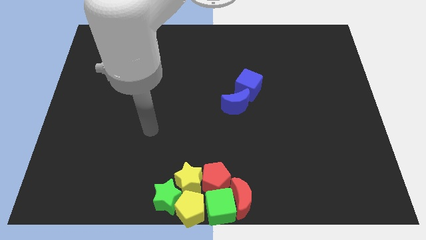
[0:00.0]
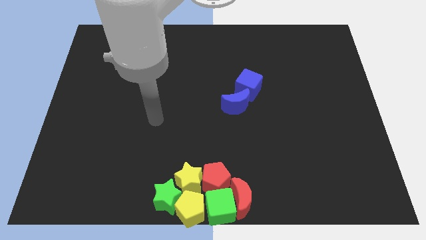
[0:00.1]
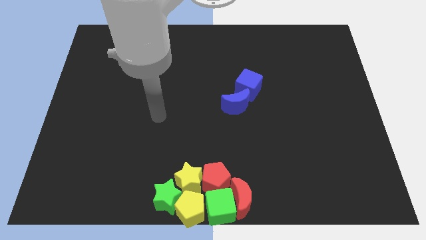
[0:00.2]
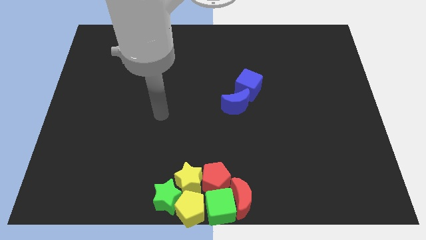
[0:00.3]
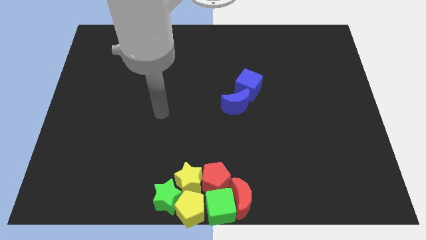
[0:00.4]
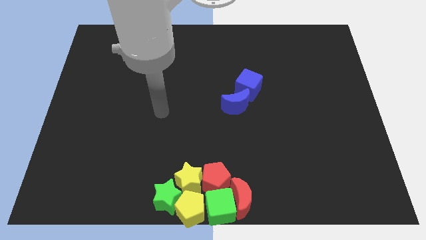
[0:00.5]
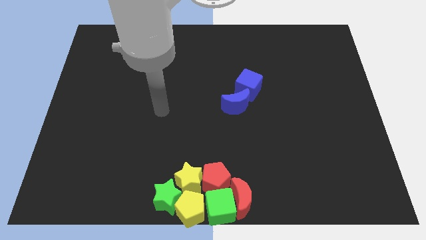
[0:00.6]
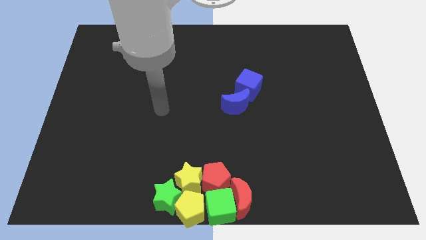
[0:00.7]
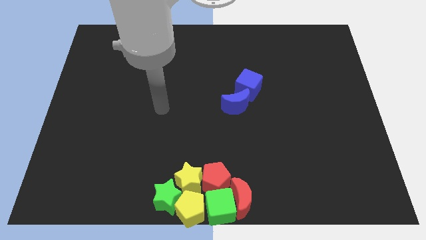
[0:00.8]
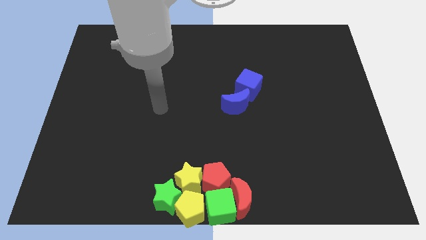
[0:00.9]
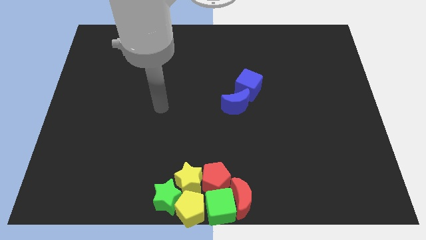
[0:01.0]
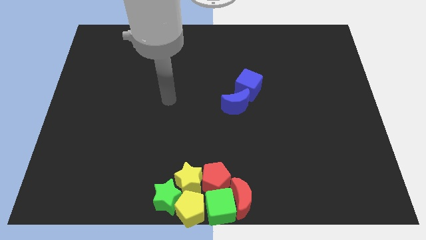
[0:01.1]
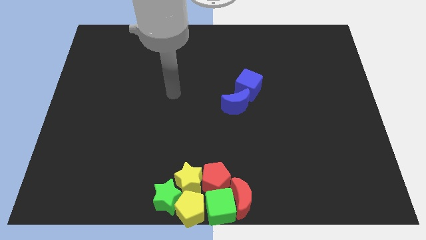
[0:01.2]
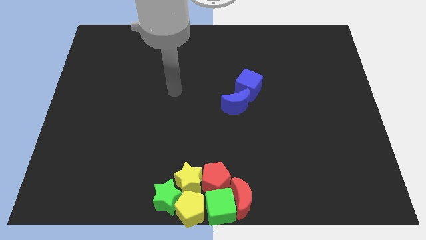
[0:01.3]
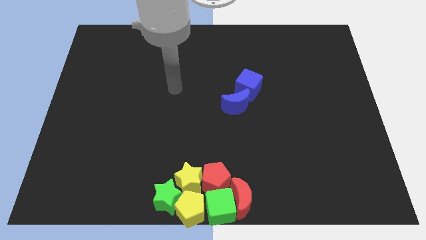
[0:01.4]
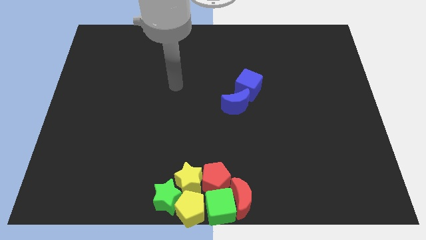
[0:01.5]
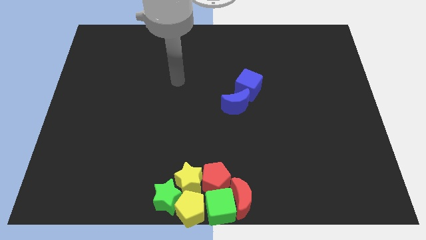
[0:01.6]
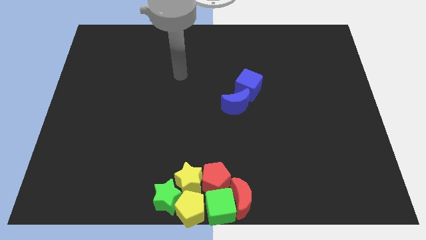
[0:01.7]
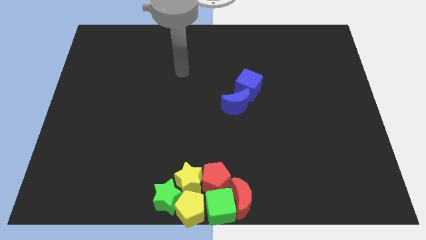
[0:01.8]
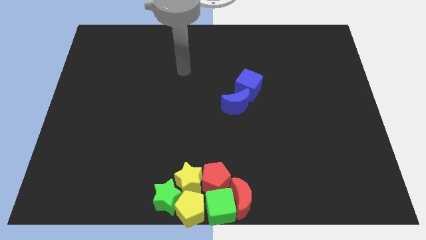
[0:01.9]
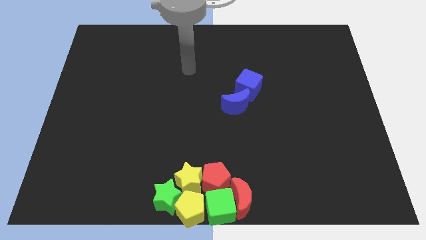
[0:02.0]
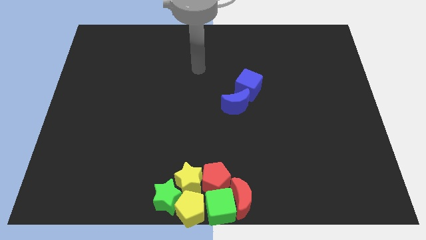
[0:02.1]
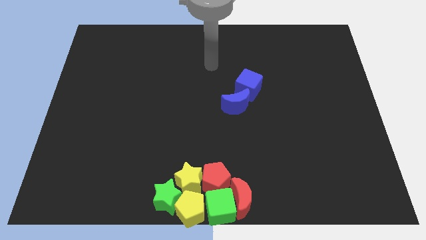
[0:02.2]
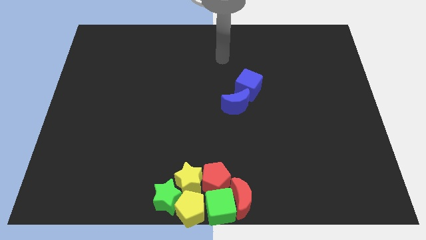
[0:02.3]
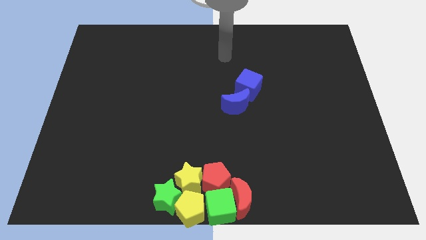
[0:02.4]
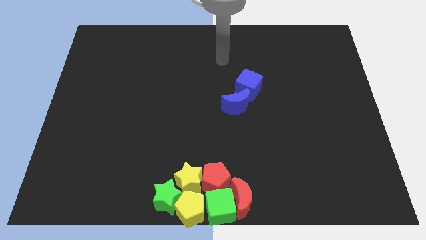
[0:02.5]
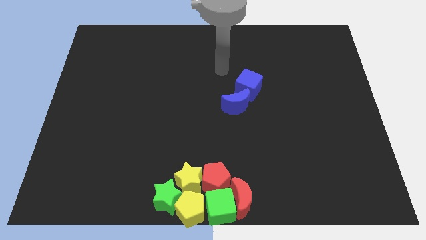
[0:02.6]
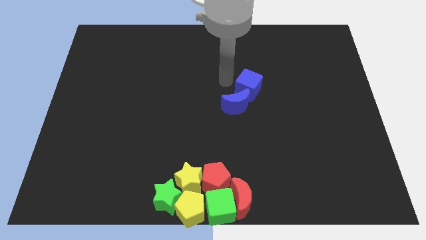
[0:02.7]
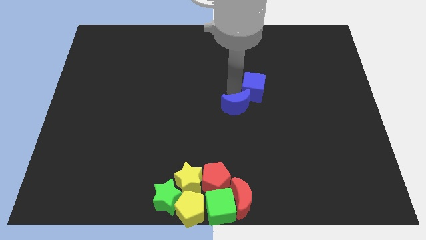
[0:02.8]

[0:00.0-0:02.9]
push the blue cube slightly to the right

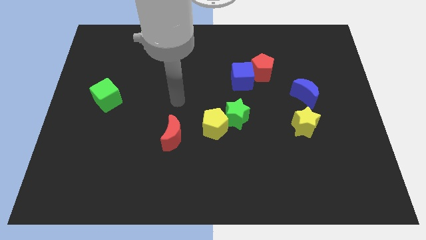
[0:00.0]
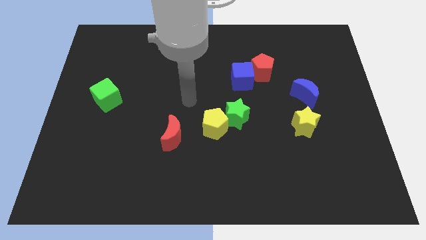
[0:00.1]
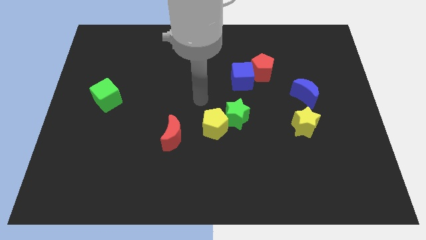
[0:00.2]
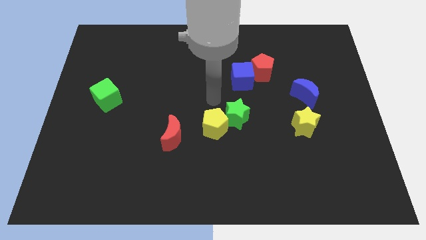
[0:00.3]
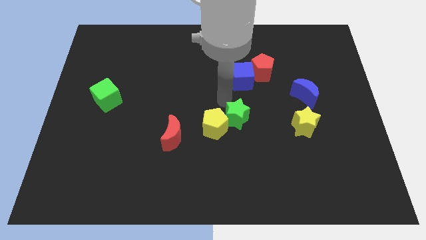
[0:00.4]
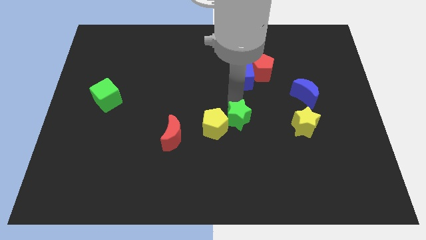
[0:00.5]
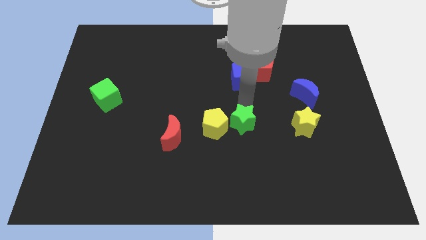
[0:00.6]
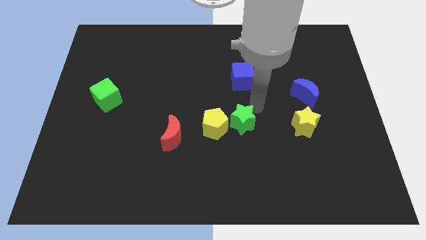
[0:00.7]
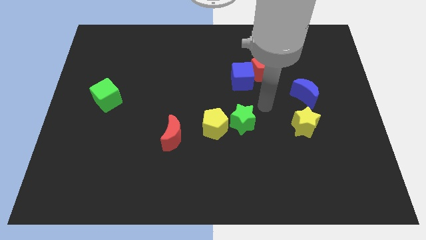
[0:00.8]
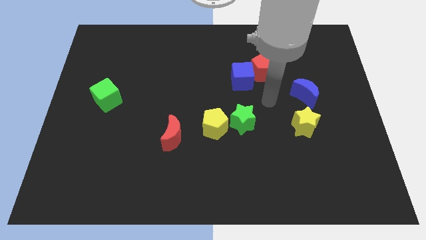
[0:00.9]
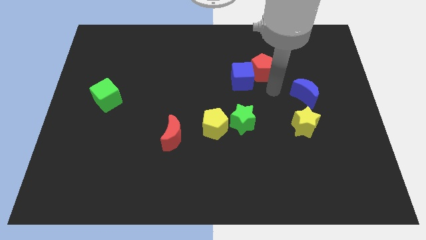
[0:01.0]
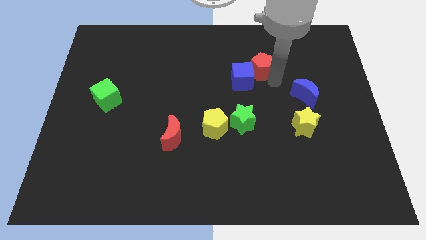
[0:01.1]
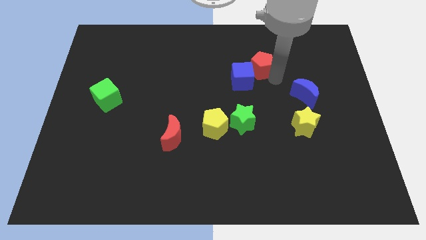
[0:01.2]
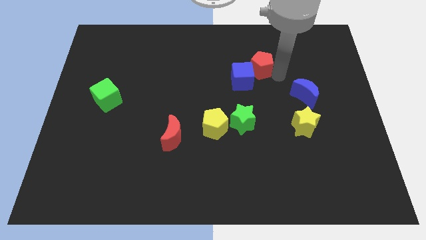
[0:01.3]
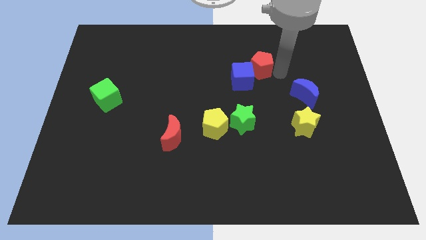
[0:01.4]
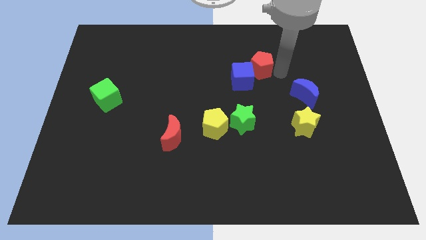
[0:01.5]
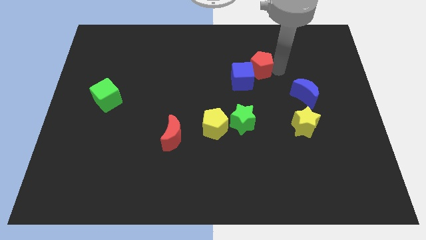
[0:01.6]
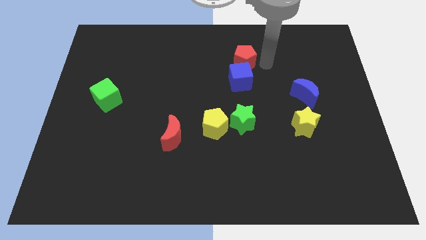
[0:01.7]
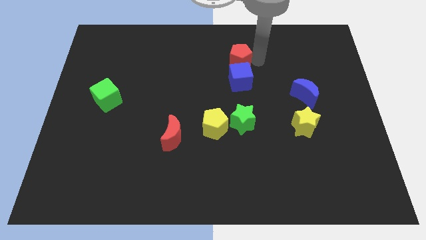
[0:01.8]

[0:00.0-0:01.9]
slightly push the red pentagon to the top side of the blue cube

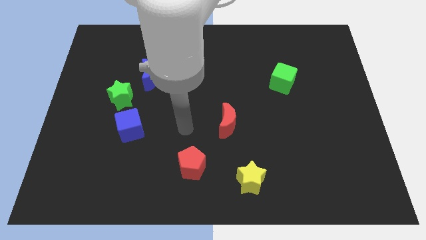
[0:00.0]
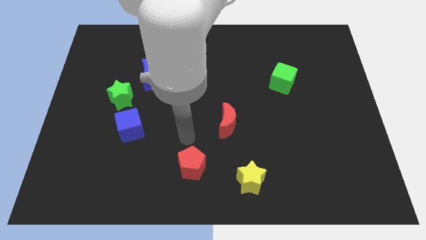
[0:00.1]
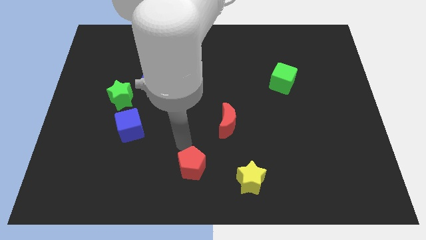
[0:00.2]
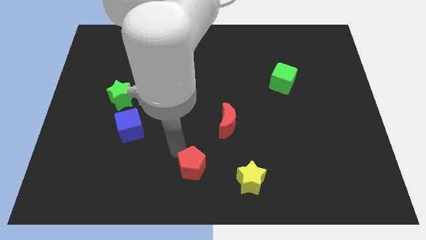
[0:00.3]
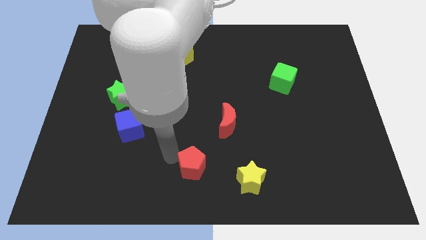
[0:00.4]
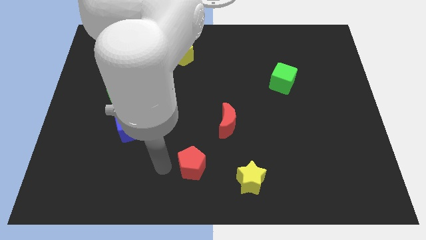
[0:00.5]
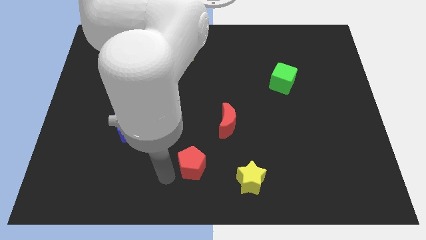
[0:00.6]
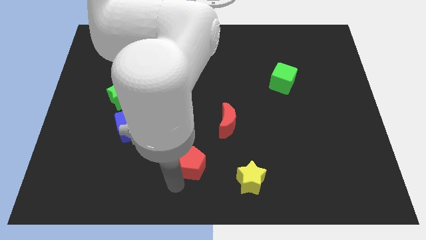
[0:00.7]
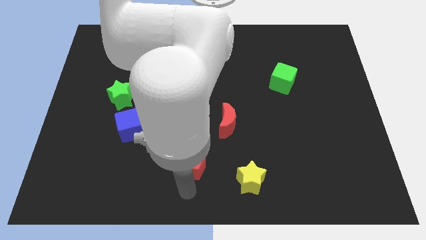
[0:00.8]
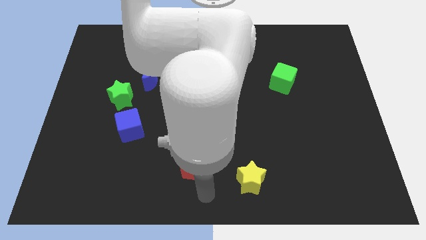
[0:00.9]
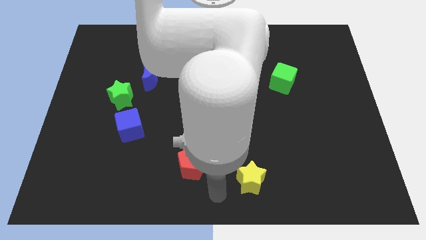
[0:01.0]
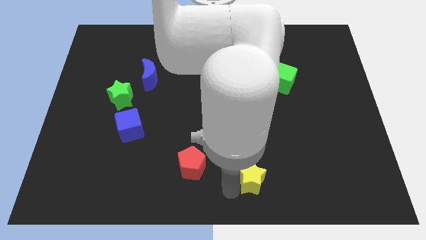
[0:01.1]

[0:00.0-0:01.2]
place your arm to the bottom left side of the yellow star

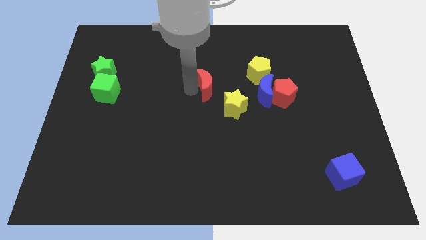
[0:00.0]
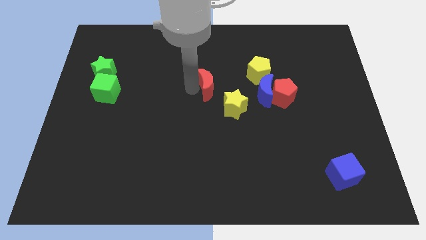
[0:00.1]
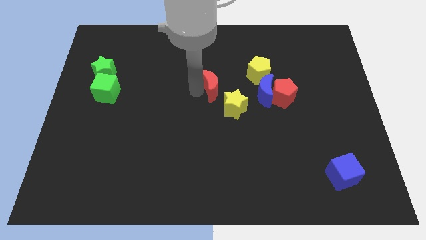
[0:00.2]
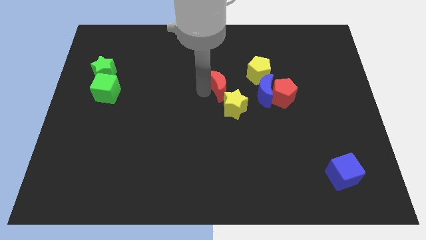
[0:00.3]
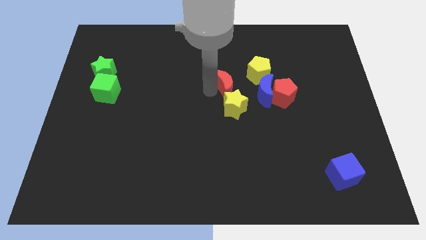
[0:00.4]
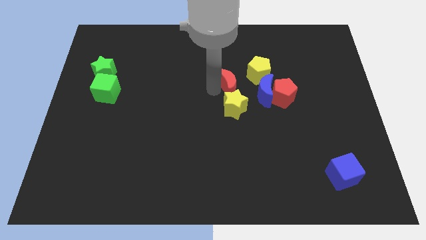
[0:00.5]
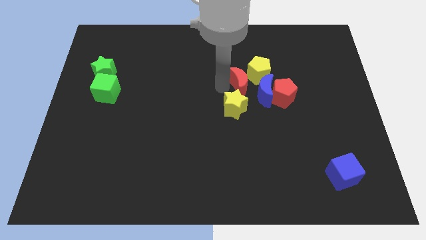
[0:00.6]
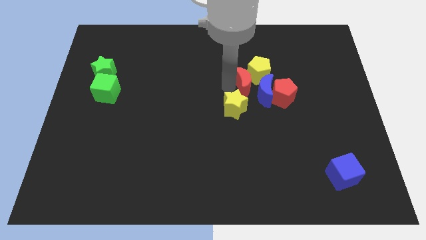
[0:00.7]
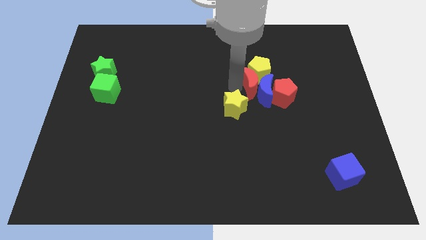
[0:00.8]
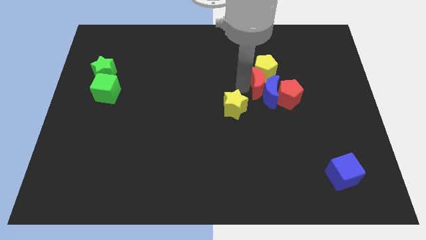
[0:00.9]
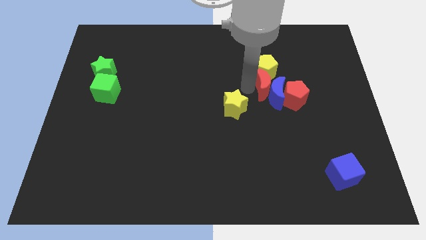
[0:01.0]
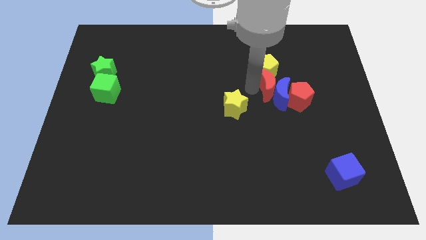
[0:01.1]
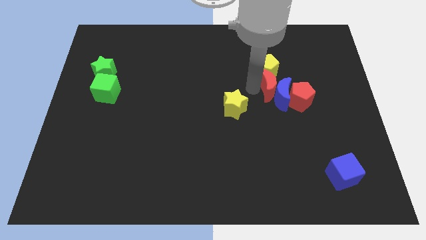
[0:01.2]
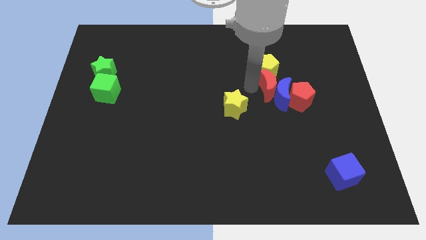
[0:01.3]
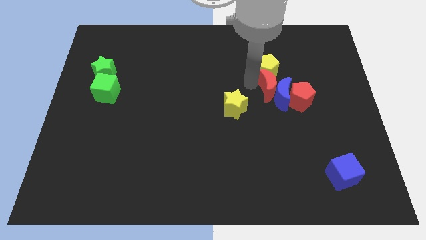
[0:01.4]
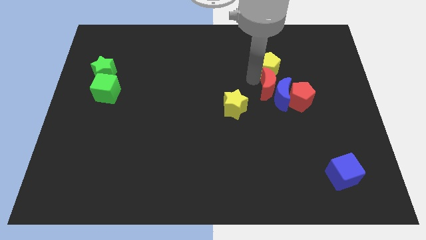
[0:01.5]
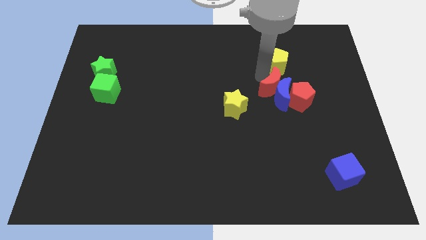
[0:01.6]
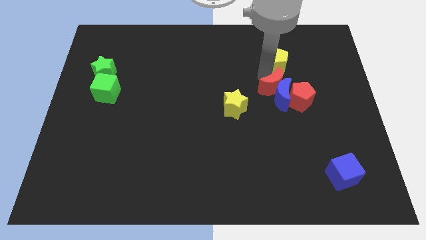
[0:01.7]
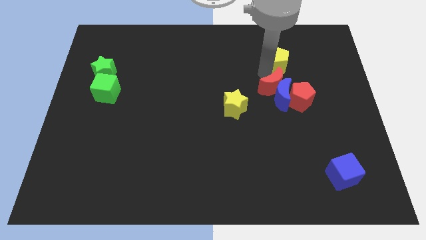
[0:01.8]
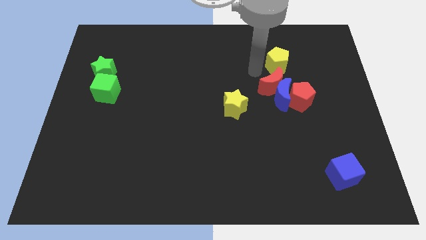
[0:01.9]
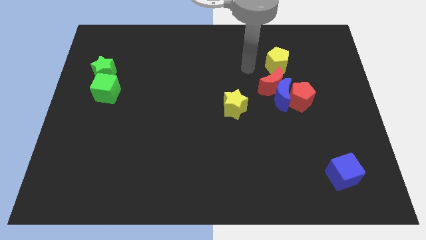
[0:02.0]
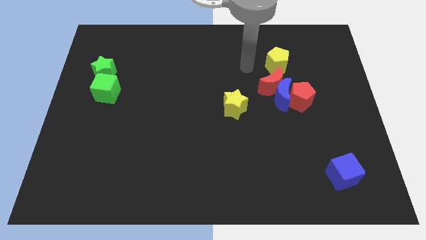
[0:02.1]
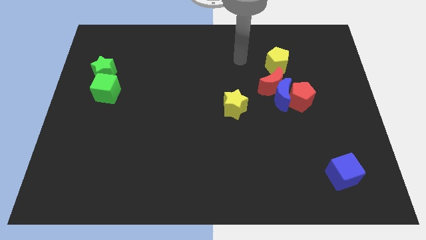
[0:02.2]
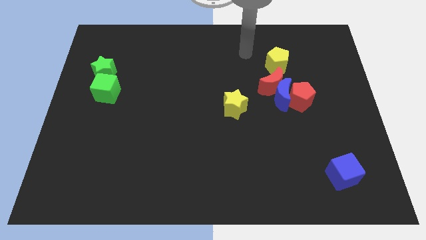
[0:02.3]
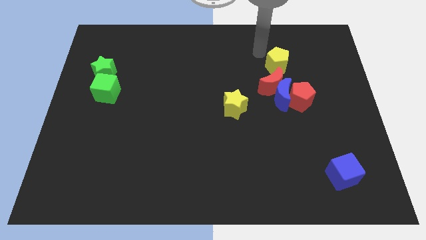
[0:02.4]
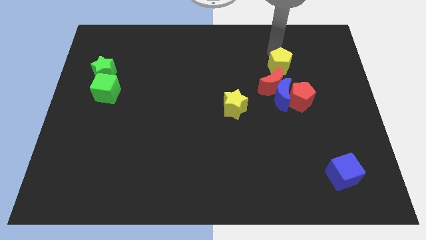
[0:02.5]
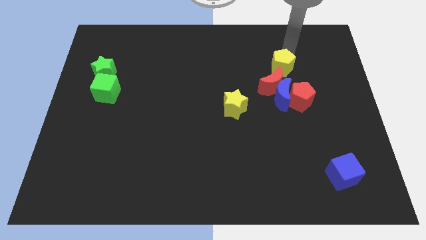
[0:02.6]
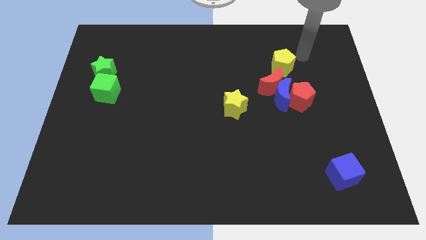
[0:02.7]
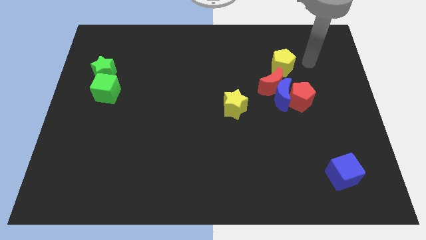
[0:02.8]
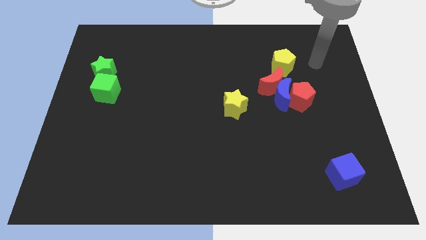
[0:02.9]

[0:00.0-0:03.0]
push the group of blocks to the right side of the board
